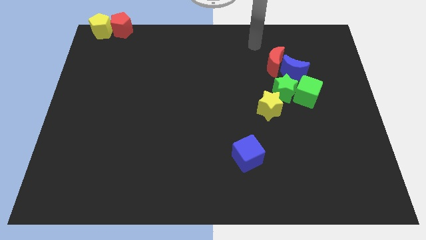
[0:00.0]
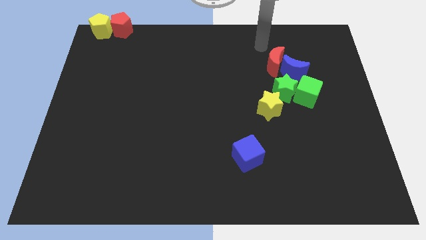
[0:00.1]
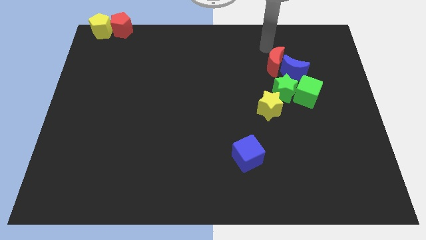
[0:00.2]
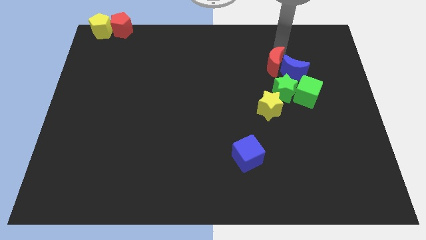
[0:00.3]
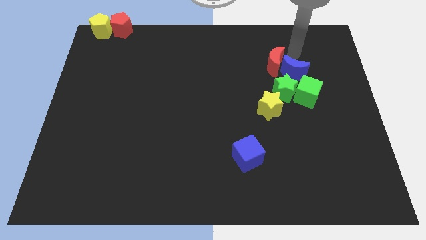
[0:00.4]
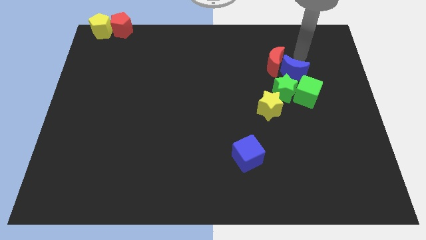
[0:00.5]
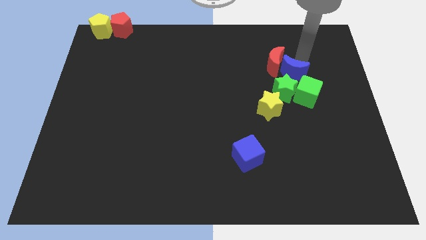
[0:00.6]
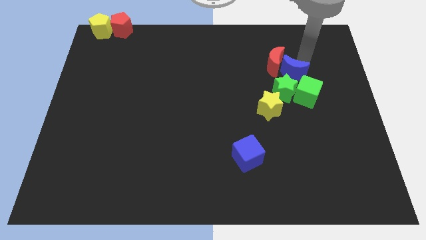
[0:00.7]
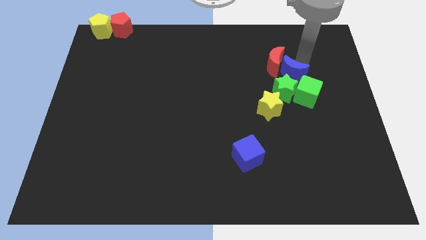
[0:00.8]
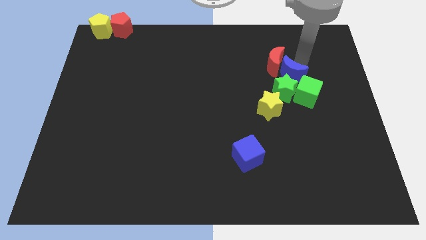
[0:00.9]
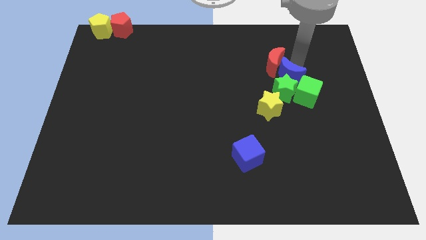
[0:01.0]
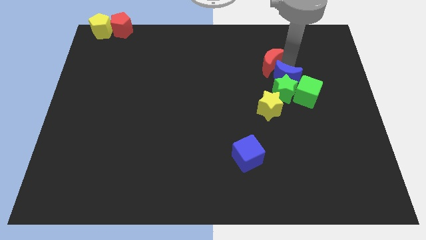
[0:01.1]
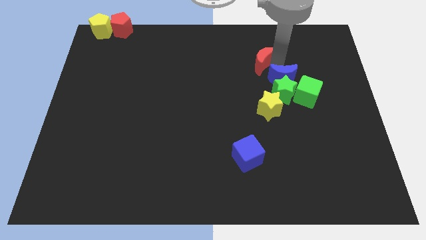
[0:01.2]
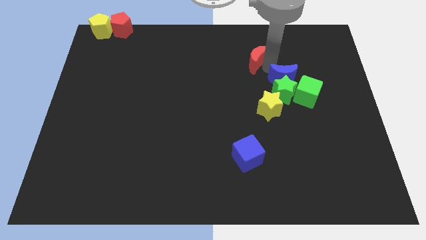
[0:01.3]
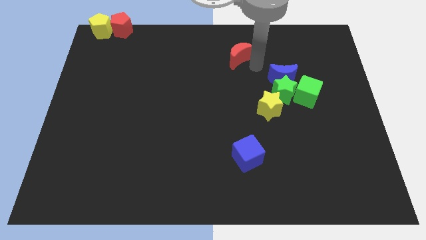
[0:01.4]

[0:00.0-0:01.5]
move blue moon into green star

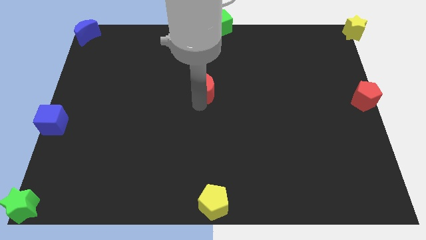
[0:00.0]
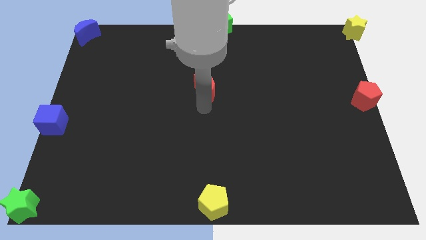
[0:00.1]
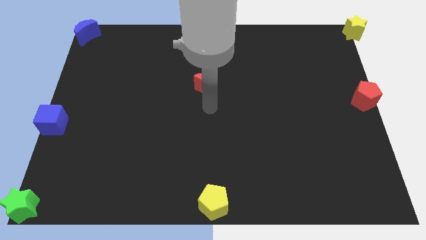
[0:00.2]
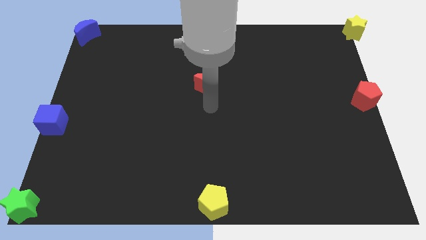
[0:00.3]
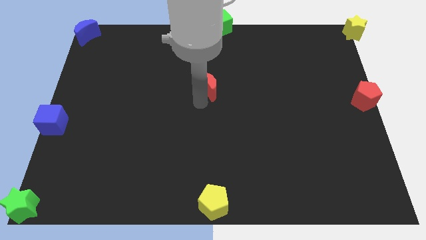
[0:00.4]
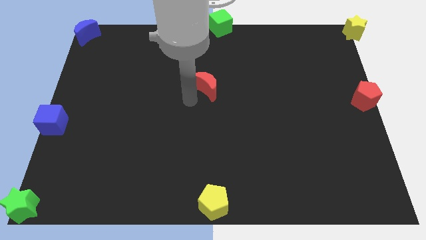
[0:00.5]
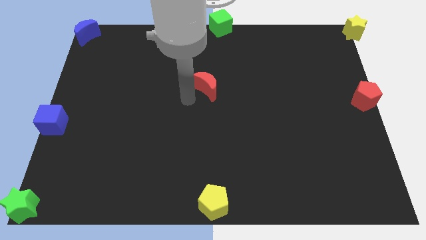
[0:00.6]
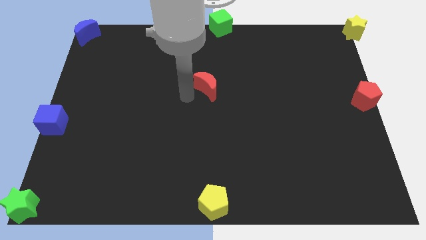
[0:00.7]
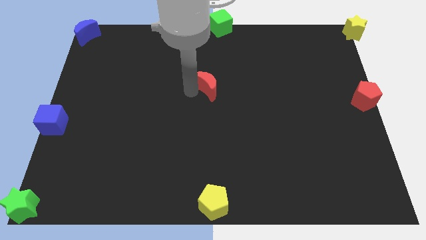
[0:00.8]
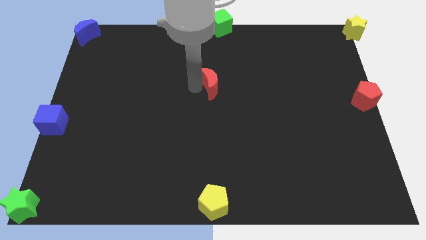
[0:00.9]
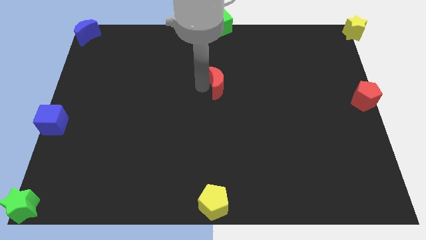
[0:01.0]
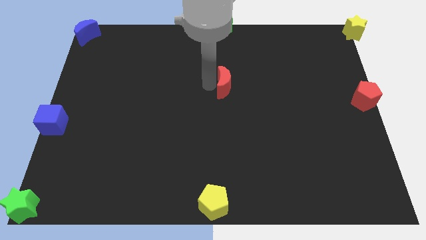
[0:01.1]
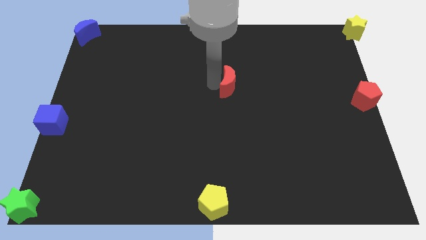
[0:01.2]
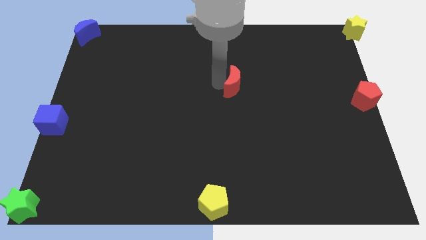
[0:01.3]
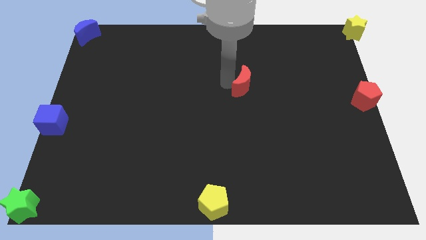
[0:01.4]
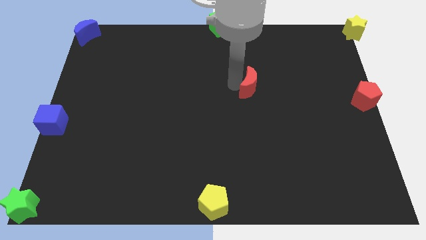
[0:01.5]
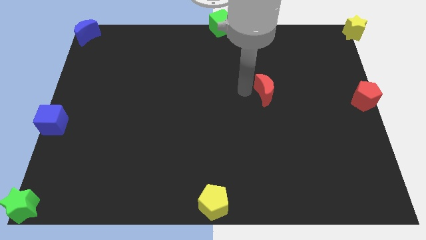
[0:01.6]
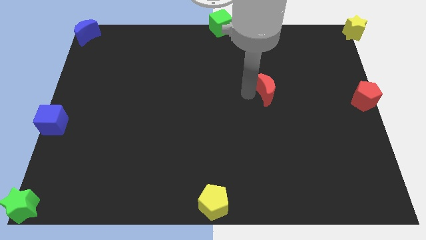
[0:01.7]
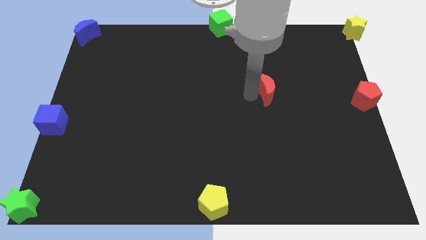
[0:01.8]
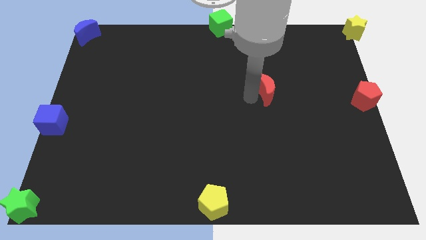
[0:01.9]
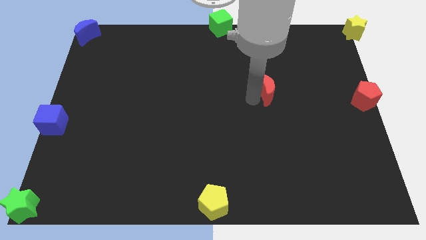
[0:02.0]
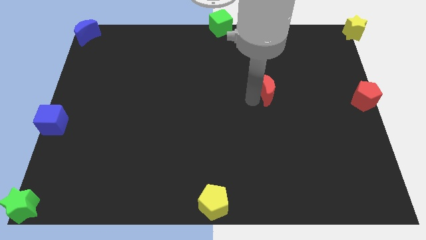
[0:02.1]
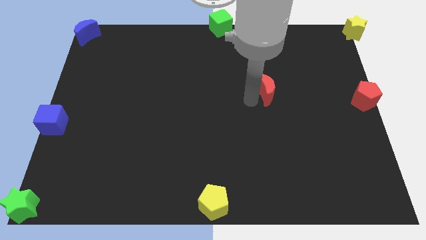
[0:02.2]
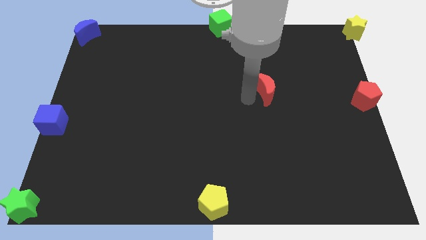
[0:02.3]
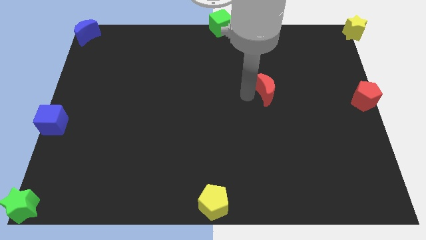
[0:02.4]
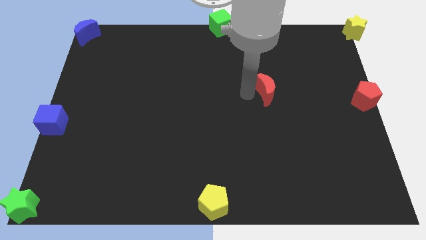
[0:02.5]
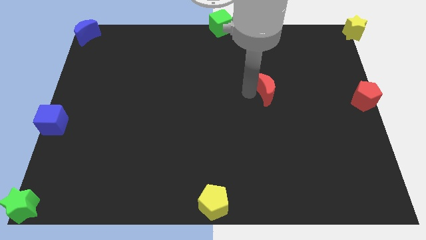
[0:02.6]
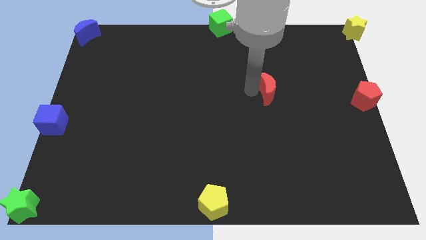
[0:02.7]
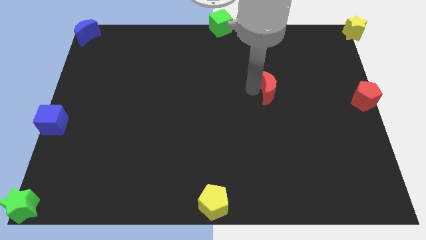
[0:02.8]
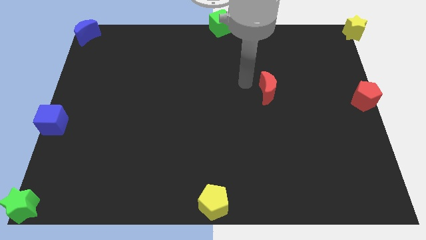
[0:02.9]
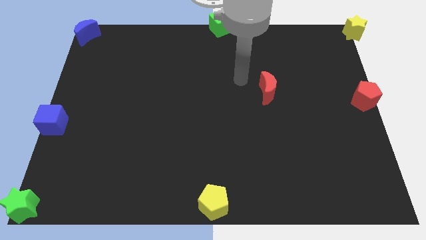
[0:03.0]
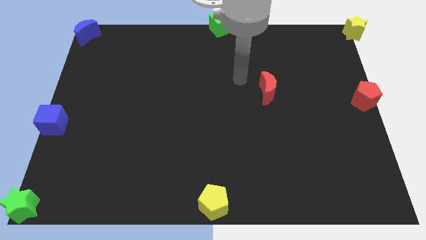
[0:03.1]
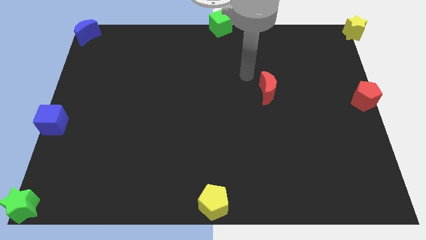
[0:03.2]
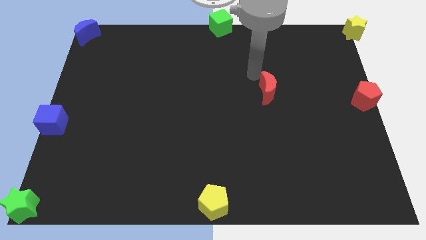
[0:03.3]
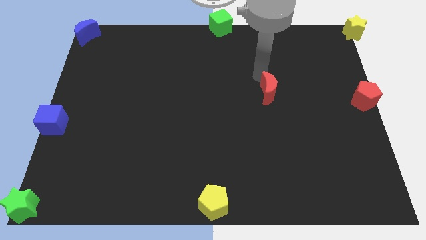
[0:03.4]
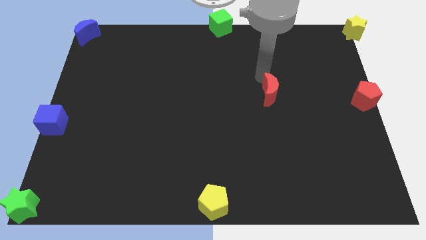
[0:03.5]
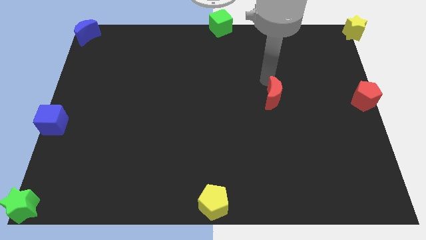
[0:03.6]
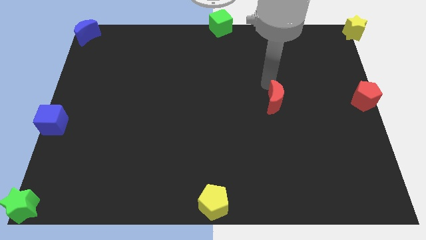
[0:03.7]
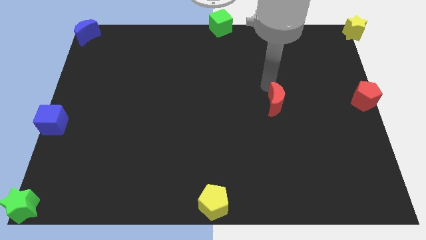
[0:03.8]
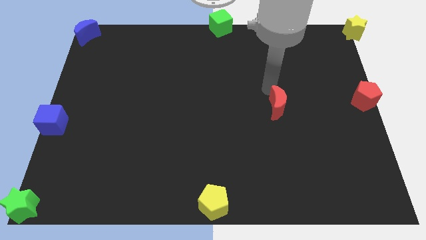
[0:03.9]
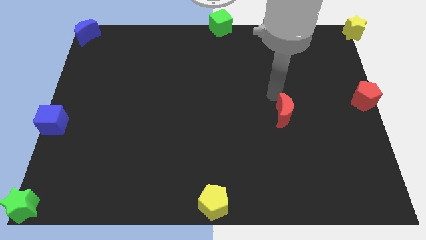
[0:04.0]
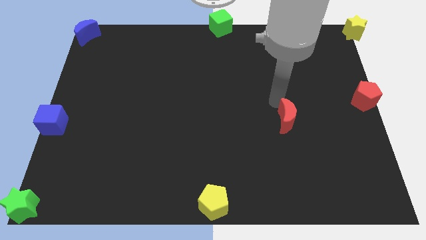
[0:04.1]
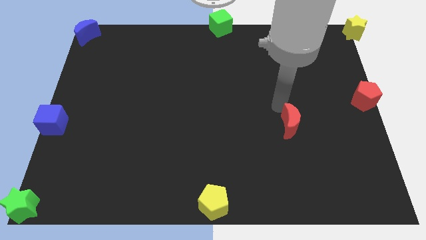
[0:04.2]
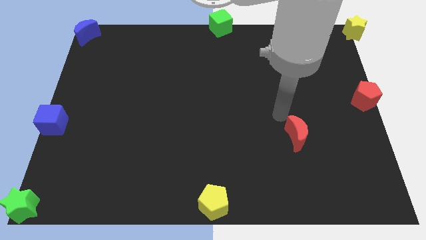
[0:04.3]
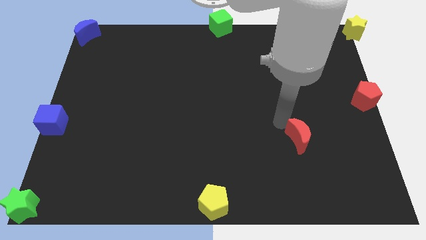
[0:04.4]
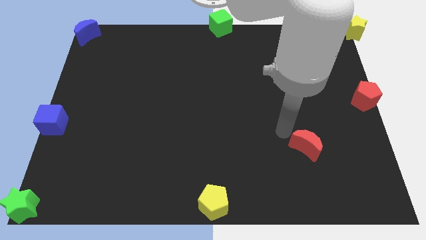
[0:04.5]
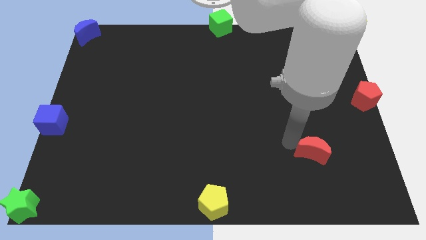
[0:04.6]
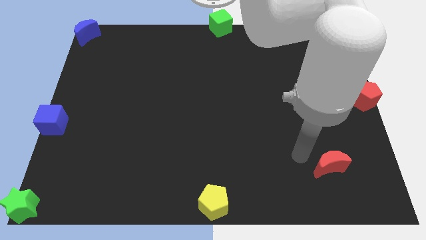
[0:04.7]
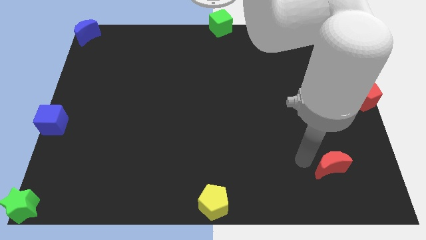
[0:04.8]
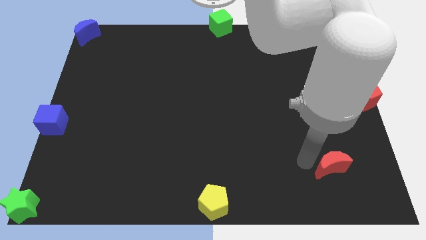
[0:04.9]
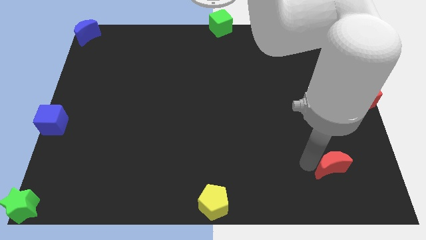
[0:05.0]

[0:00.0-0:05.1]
push the red moon towards the bottom right

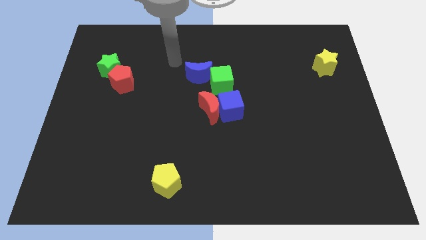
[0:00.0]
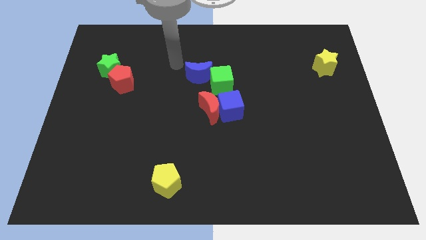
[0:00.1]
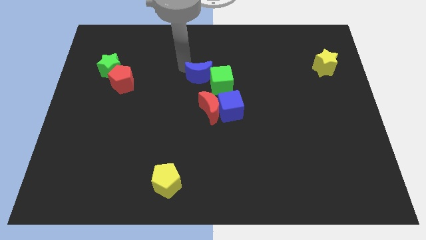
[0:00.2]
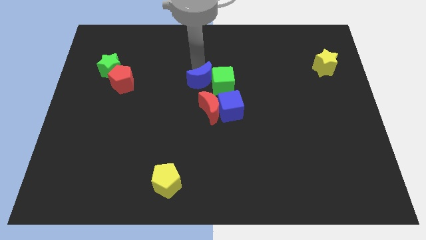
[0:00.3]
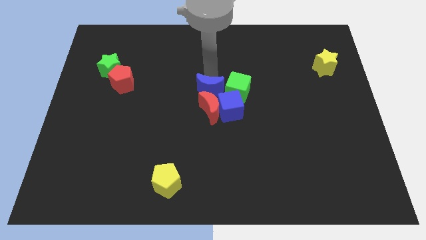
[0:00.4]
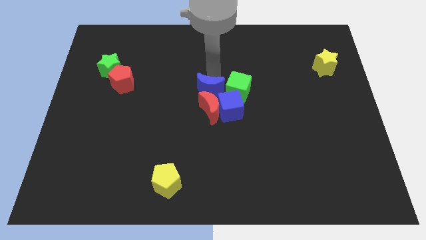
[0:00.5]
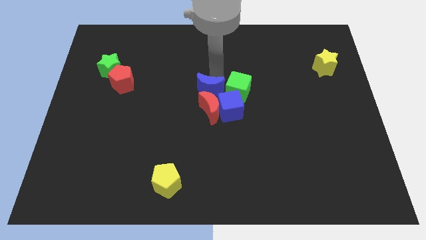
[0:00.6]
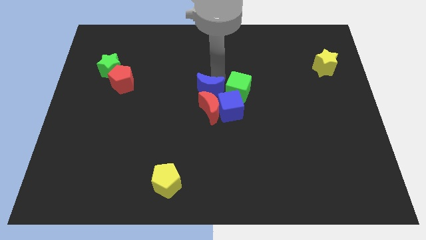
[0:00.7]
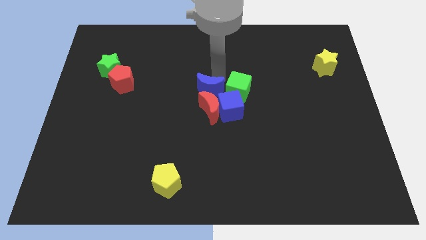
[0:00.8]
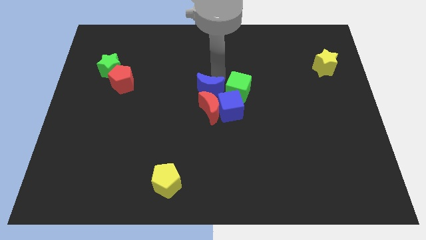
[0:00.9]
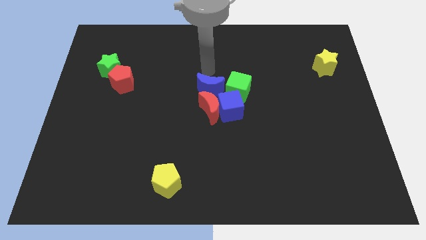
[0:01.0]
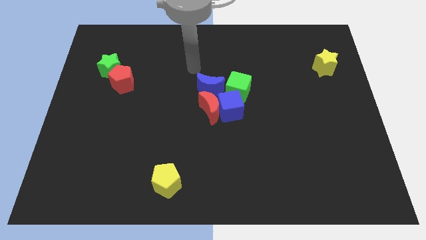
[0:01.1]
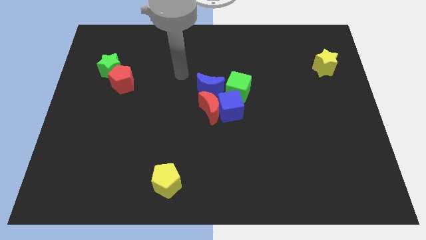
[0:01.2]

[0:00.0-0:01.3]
push the blue moon towards green cube red moon blue cube

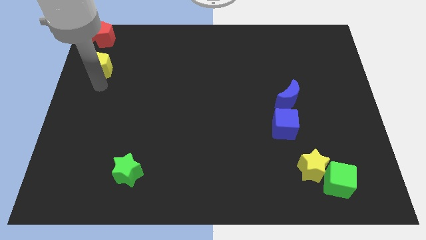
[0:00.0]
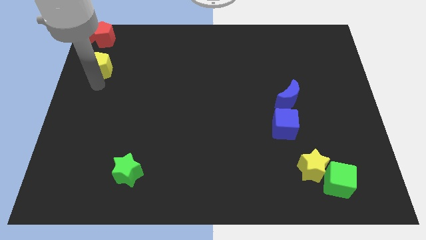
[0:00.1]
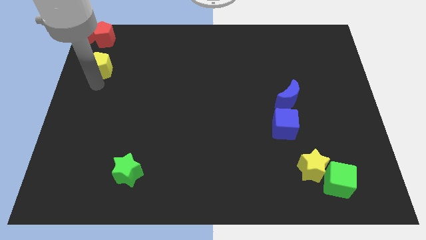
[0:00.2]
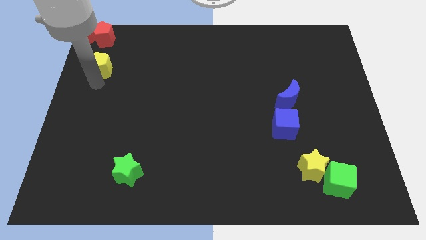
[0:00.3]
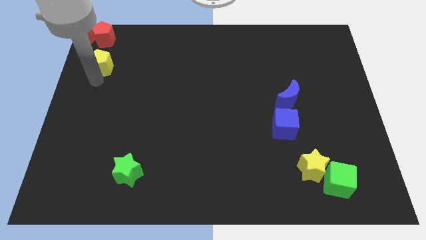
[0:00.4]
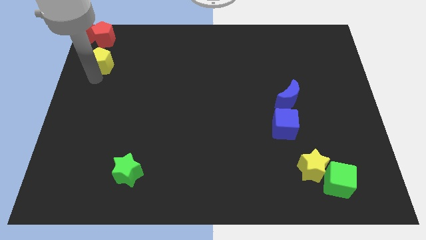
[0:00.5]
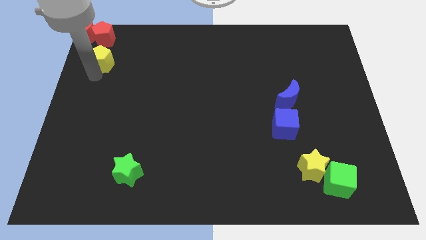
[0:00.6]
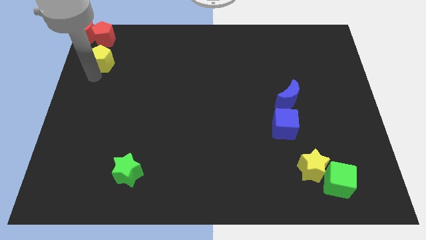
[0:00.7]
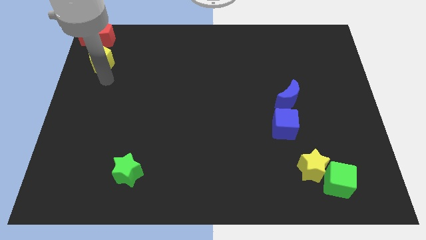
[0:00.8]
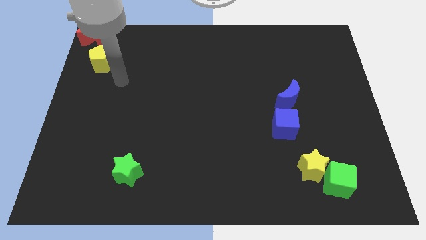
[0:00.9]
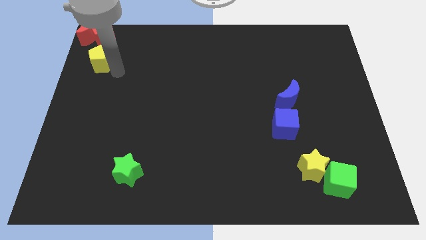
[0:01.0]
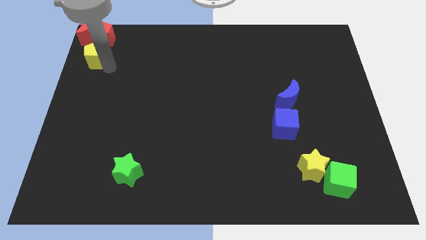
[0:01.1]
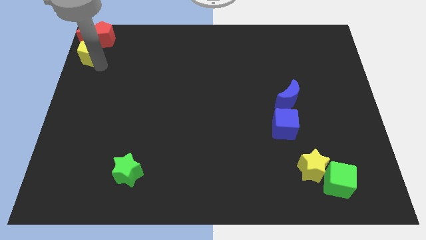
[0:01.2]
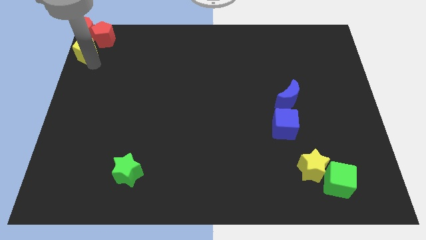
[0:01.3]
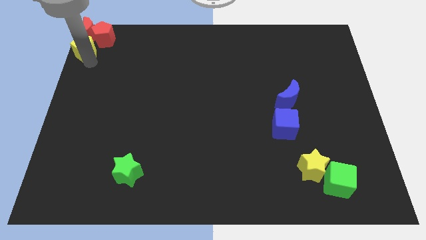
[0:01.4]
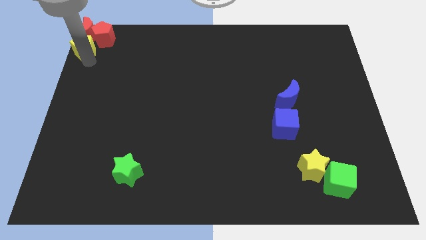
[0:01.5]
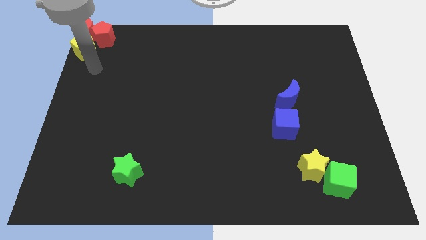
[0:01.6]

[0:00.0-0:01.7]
put the yellow pentagon below the red crescent
